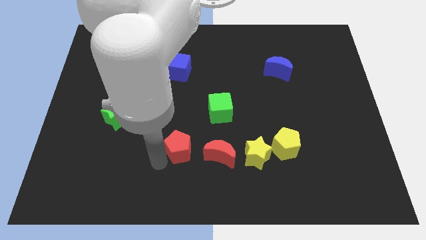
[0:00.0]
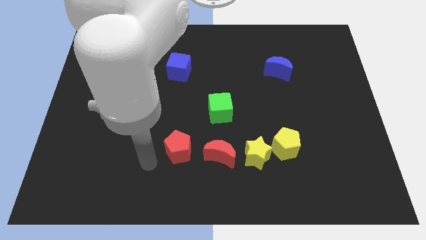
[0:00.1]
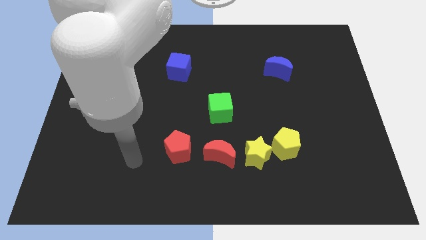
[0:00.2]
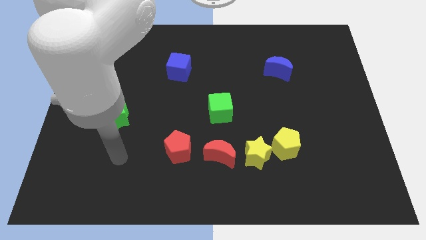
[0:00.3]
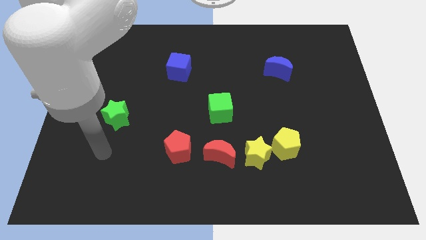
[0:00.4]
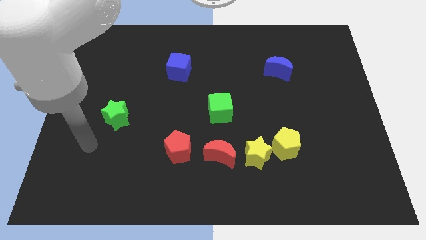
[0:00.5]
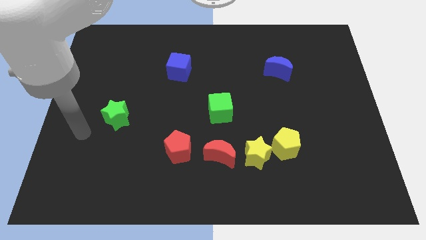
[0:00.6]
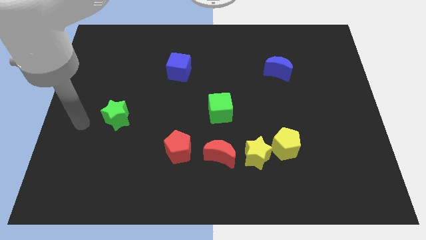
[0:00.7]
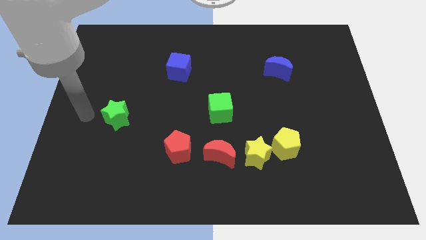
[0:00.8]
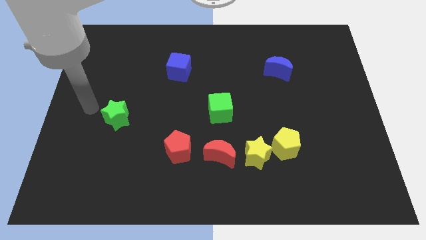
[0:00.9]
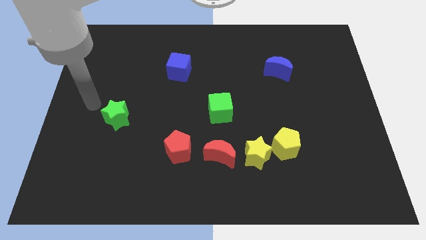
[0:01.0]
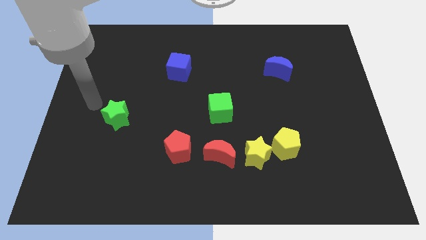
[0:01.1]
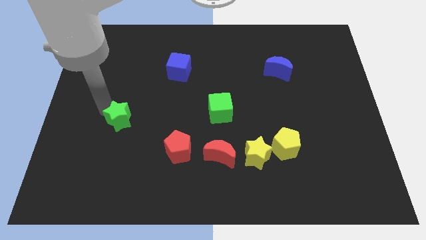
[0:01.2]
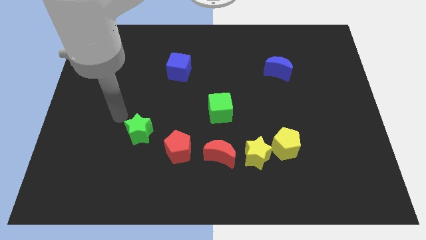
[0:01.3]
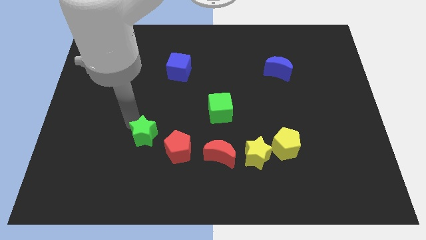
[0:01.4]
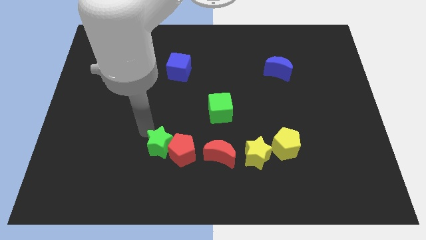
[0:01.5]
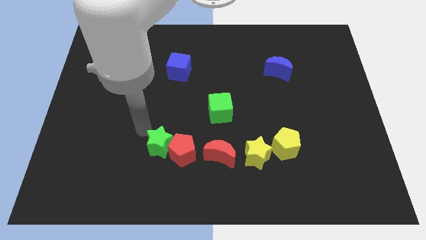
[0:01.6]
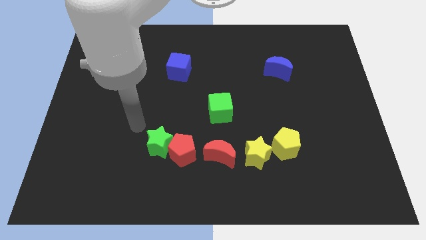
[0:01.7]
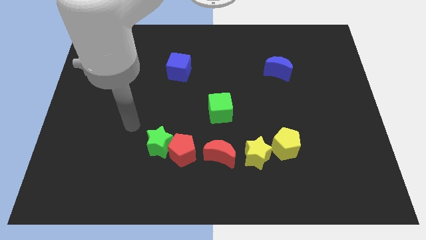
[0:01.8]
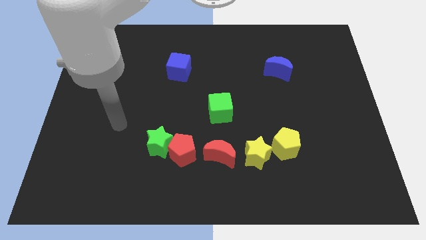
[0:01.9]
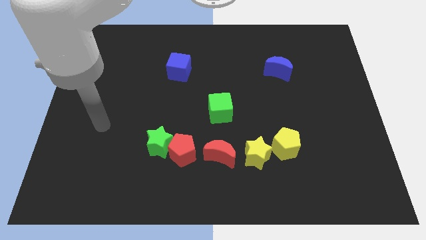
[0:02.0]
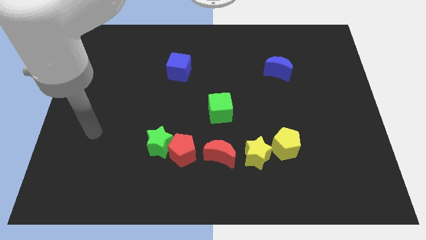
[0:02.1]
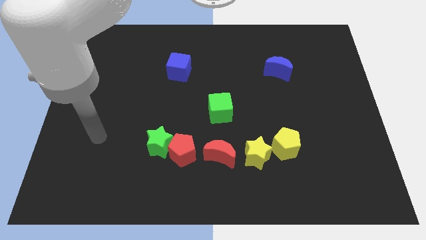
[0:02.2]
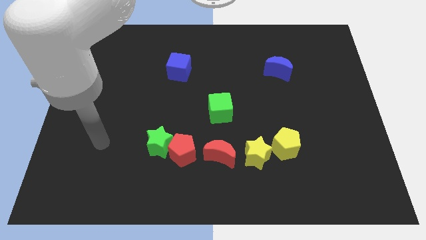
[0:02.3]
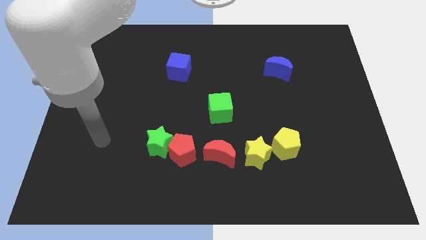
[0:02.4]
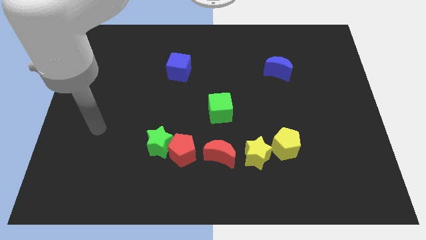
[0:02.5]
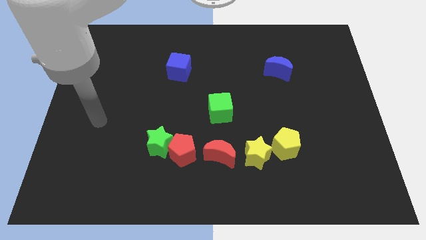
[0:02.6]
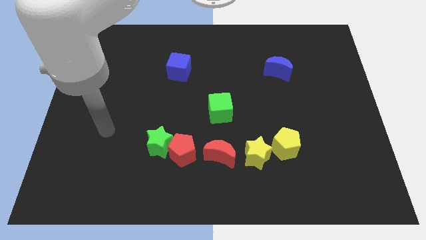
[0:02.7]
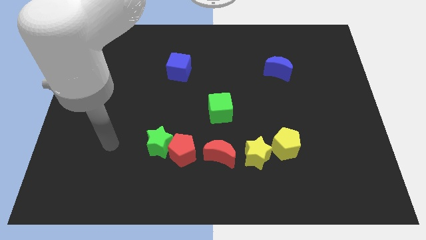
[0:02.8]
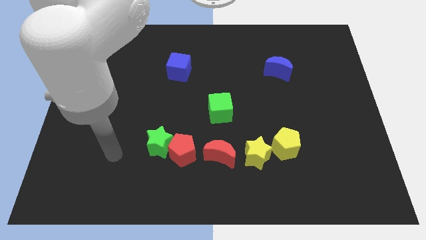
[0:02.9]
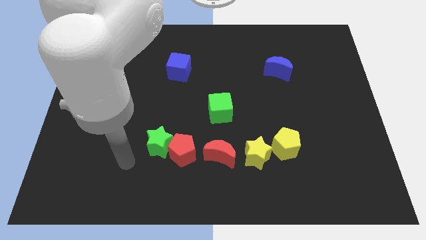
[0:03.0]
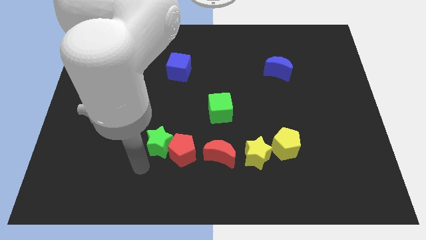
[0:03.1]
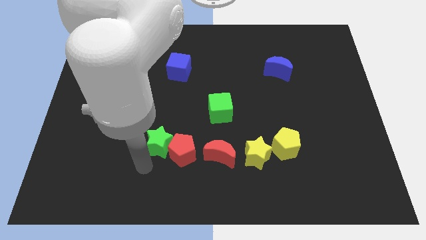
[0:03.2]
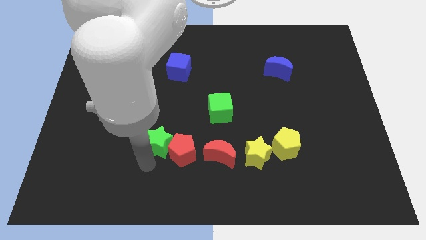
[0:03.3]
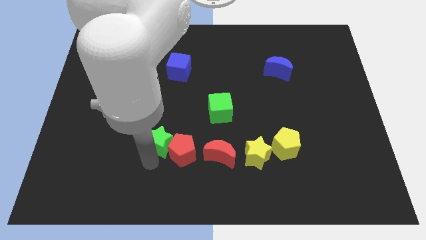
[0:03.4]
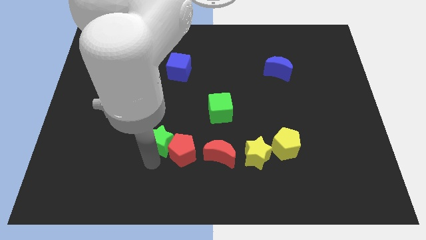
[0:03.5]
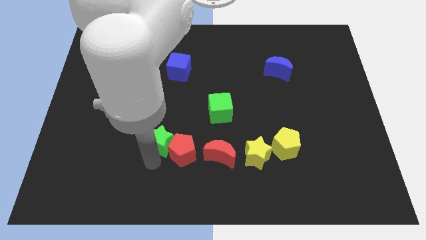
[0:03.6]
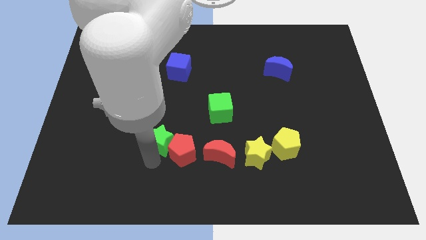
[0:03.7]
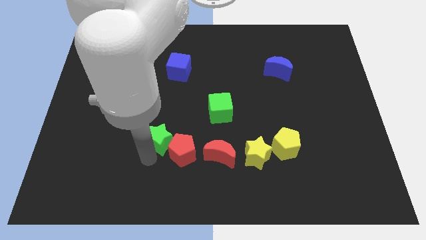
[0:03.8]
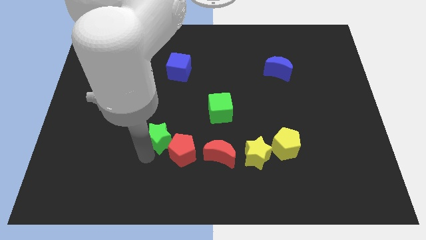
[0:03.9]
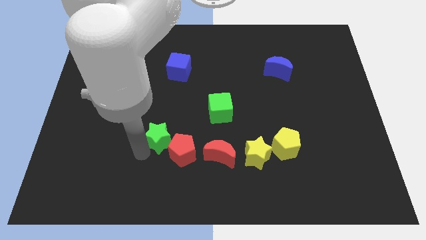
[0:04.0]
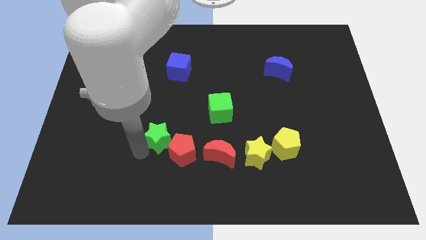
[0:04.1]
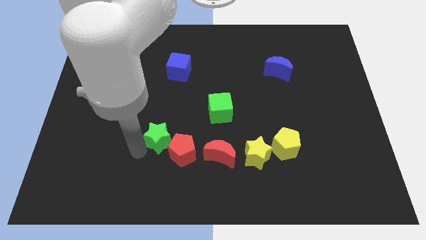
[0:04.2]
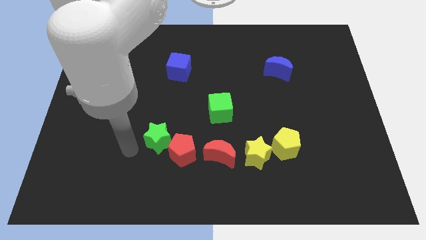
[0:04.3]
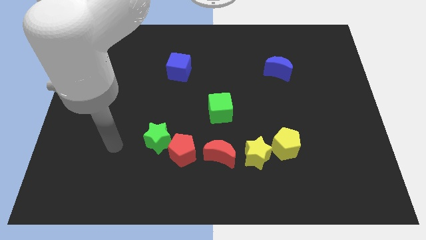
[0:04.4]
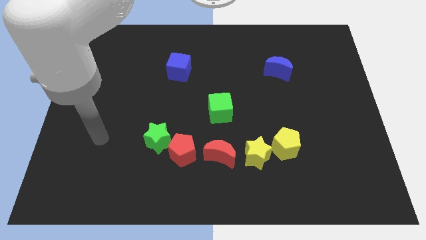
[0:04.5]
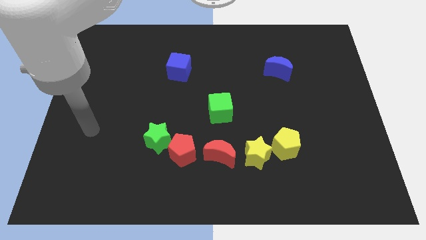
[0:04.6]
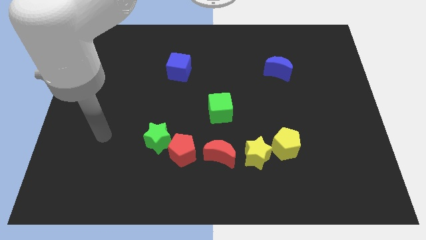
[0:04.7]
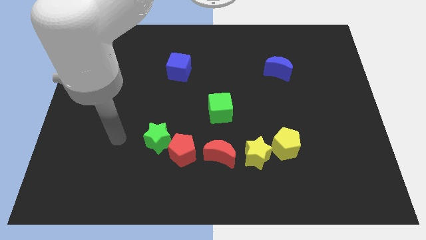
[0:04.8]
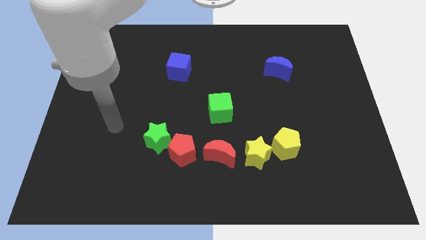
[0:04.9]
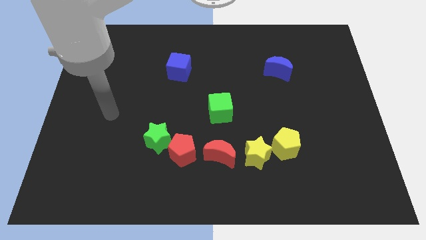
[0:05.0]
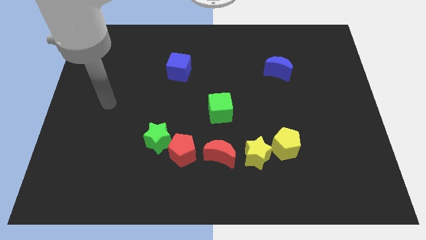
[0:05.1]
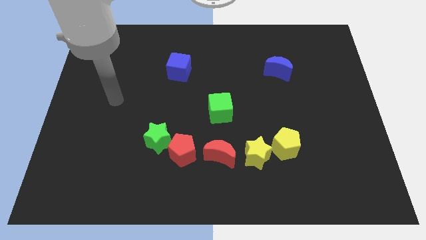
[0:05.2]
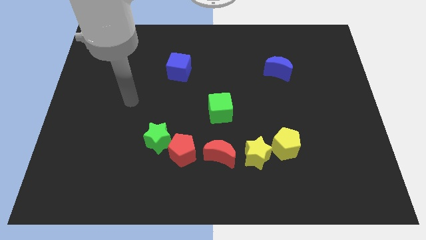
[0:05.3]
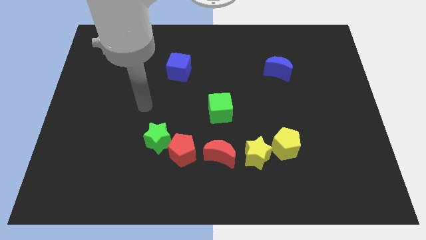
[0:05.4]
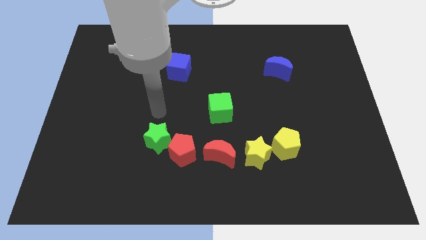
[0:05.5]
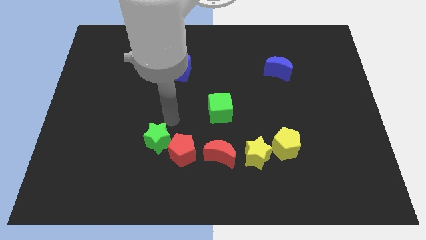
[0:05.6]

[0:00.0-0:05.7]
place the green star on the top right of the red pentagon

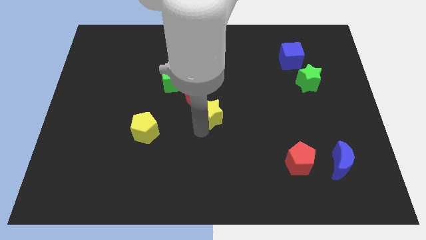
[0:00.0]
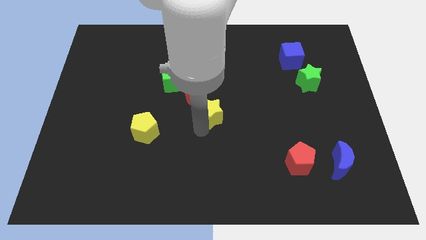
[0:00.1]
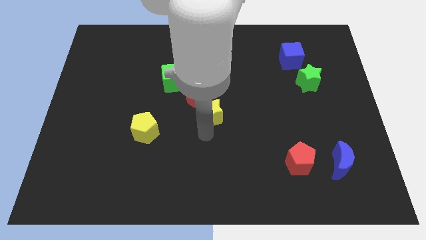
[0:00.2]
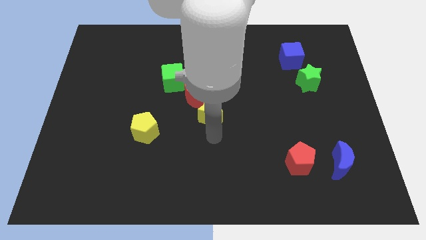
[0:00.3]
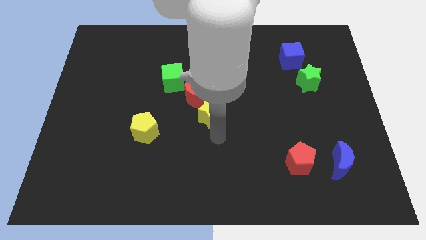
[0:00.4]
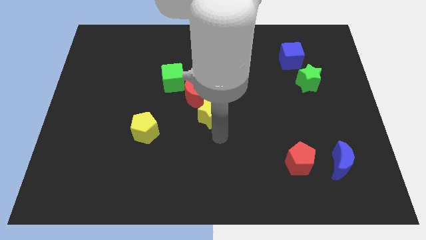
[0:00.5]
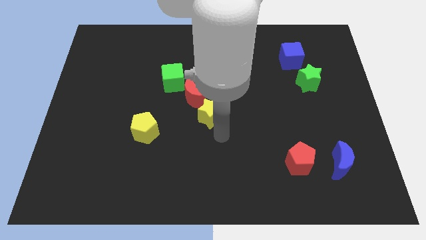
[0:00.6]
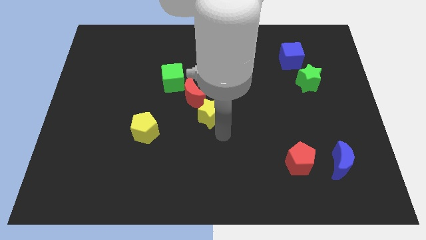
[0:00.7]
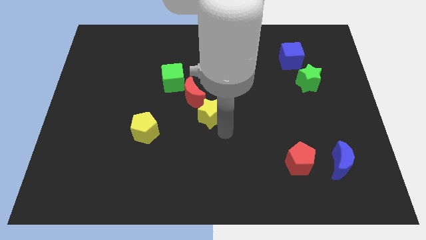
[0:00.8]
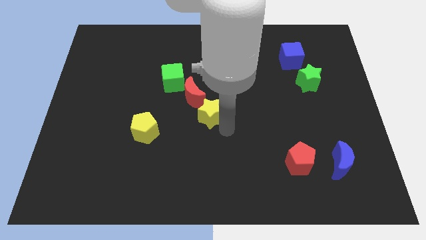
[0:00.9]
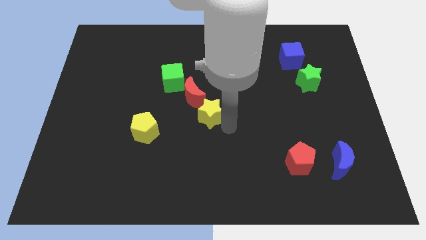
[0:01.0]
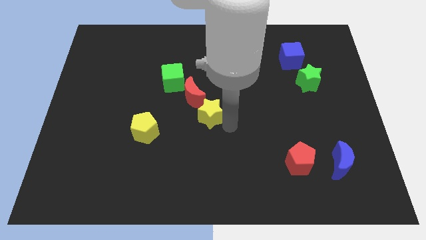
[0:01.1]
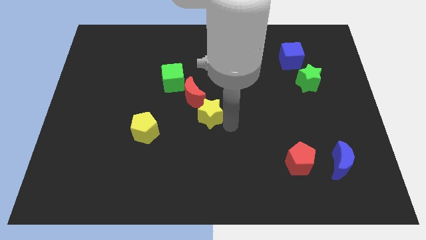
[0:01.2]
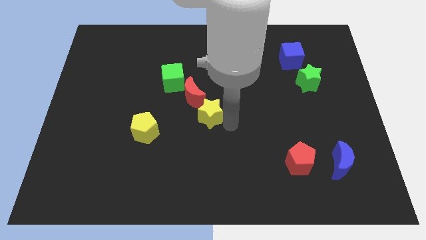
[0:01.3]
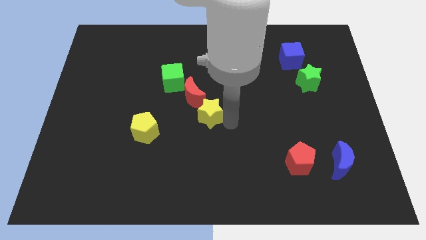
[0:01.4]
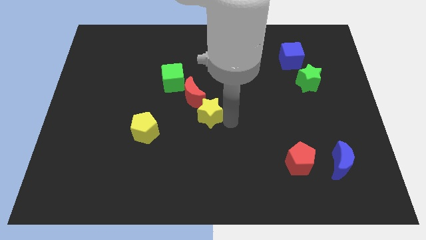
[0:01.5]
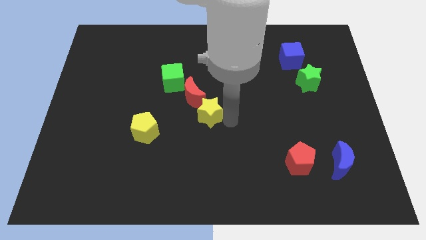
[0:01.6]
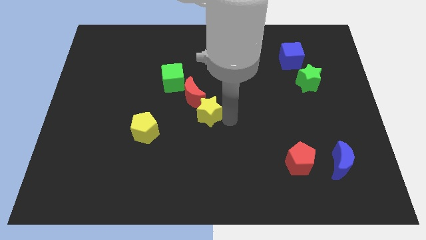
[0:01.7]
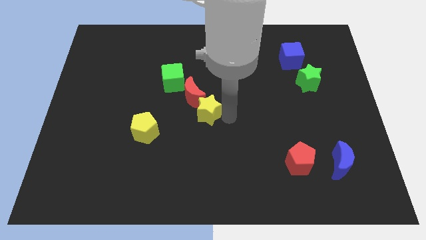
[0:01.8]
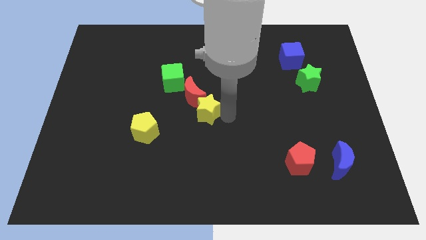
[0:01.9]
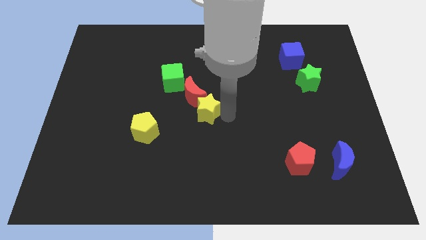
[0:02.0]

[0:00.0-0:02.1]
move the yellow star to the bottom of the red crescent

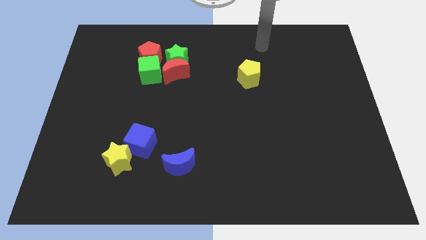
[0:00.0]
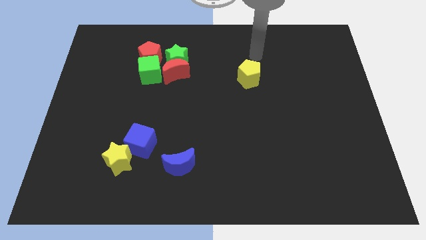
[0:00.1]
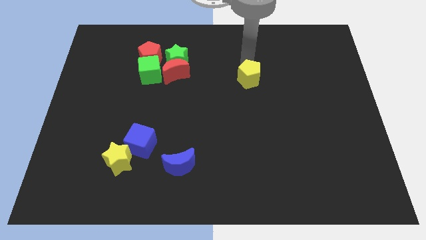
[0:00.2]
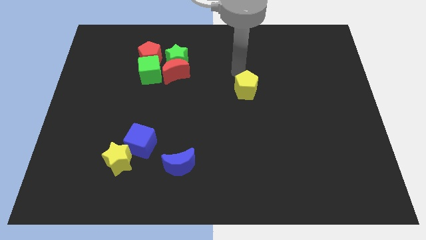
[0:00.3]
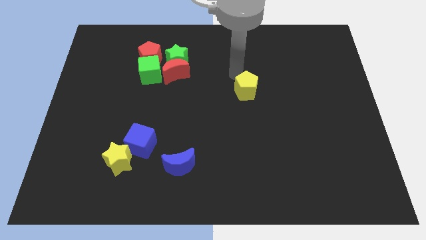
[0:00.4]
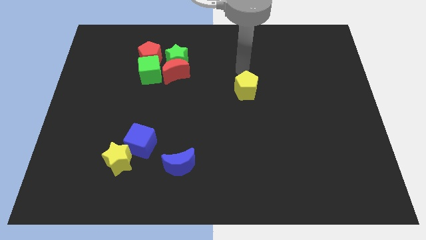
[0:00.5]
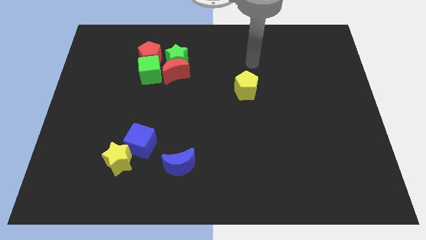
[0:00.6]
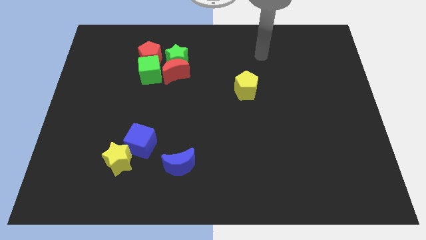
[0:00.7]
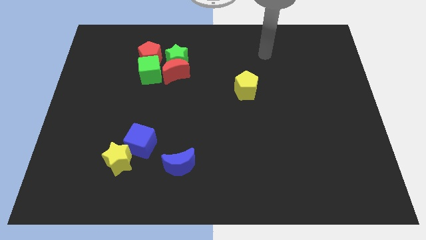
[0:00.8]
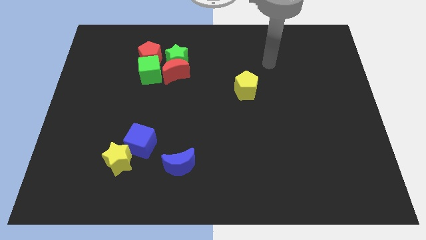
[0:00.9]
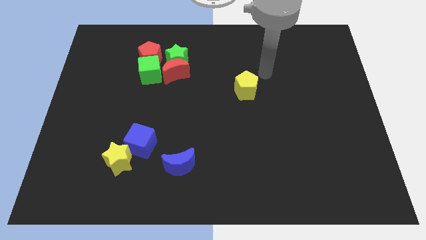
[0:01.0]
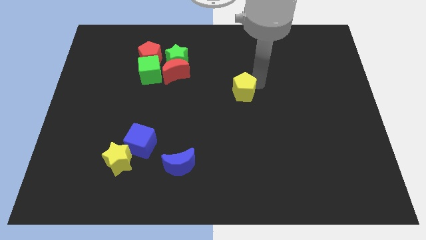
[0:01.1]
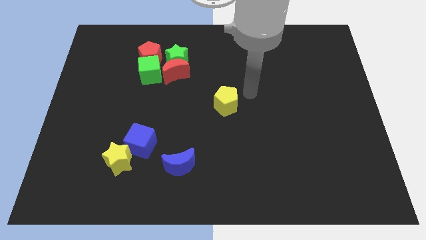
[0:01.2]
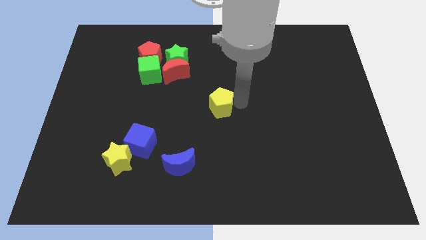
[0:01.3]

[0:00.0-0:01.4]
move the yellow pentagn to the center
